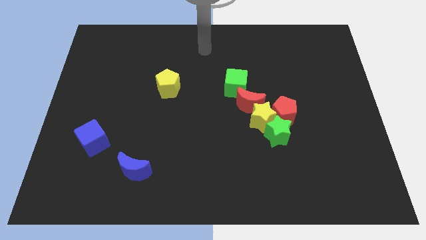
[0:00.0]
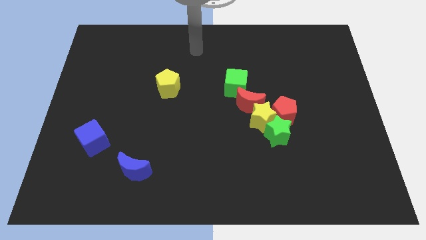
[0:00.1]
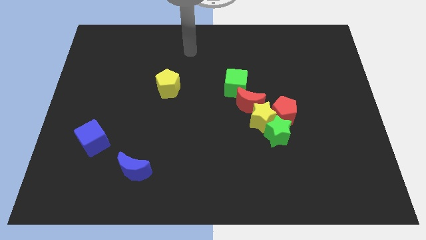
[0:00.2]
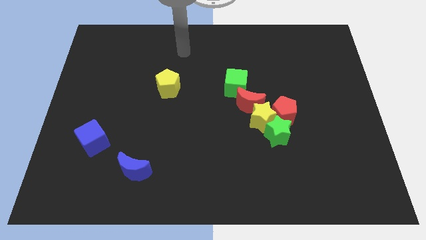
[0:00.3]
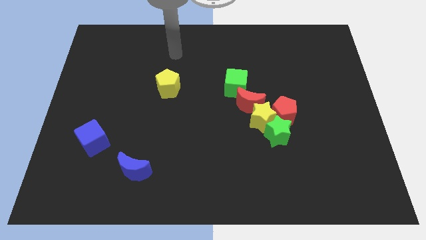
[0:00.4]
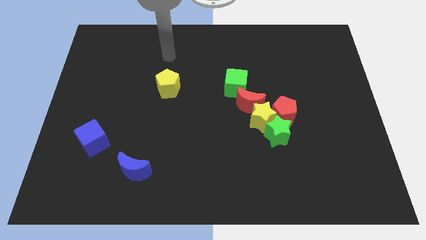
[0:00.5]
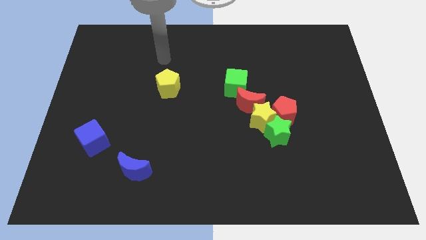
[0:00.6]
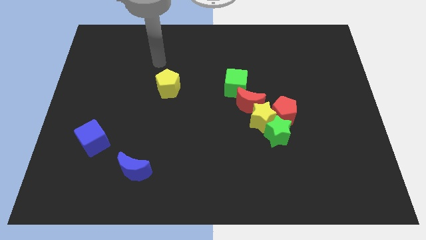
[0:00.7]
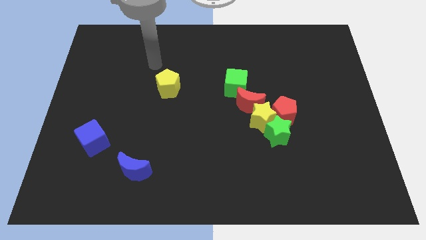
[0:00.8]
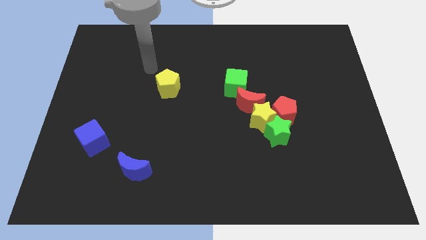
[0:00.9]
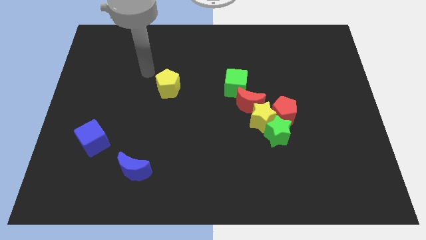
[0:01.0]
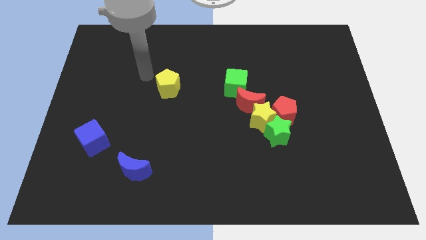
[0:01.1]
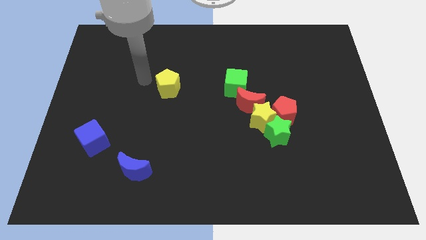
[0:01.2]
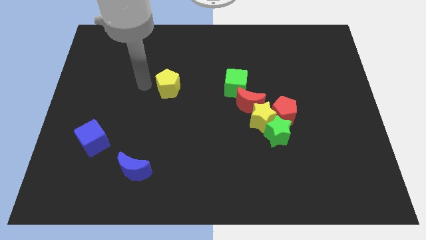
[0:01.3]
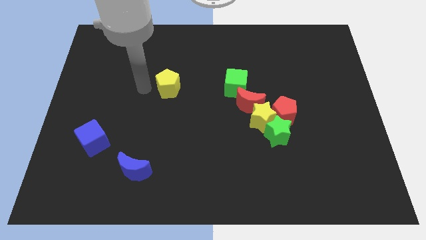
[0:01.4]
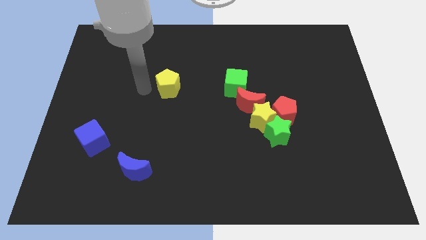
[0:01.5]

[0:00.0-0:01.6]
place your hand at the left side of the yellow pentagon

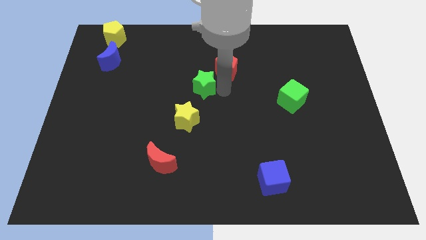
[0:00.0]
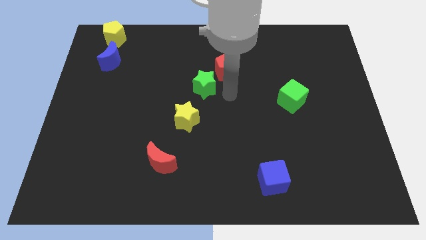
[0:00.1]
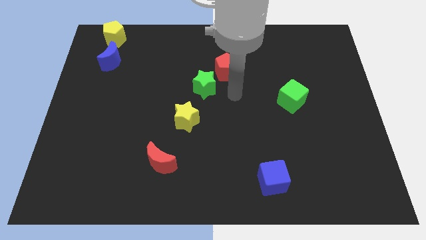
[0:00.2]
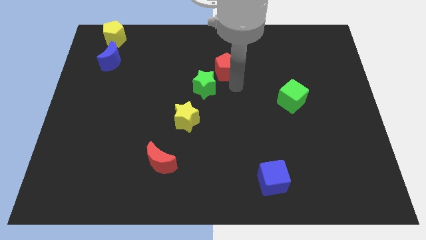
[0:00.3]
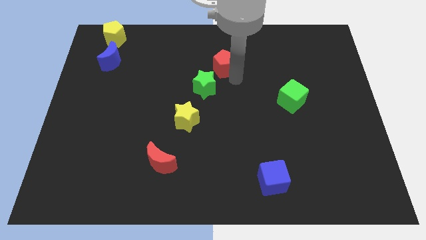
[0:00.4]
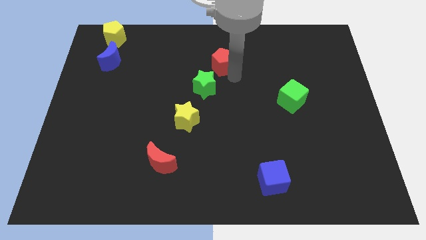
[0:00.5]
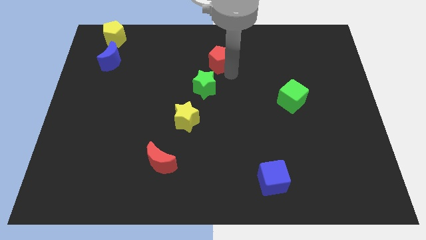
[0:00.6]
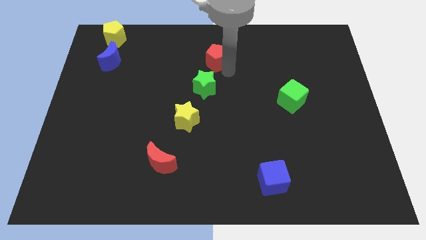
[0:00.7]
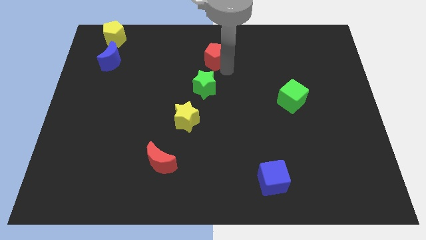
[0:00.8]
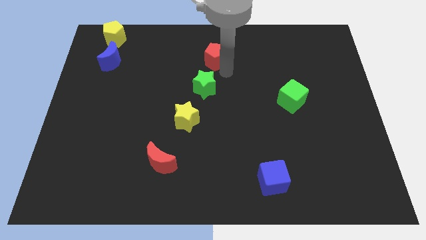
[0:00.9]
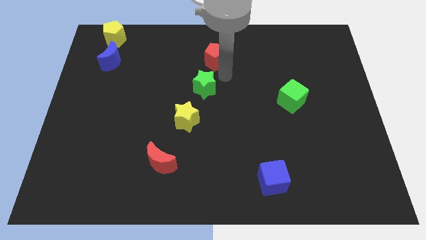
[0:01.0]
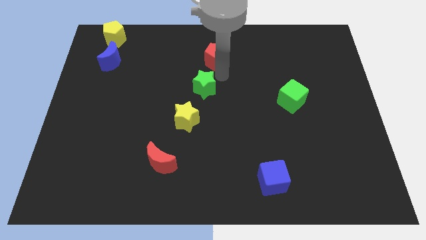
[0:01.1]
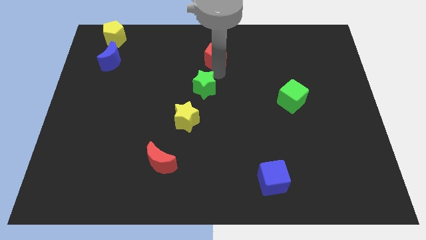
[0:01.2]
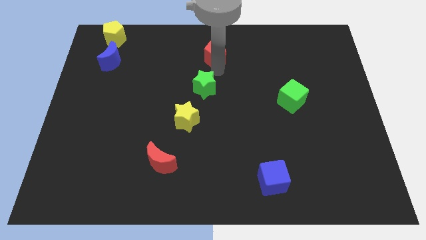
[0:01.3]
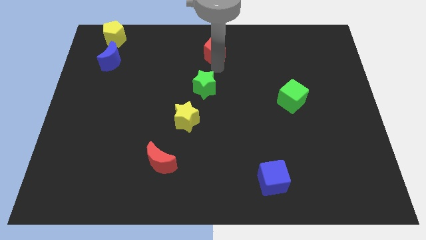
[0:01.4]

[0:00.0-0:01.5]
push the red pentagon towards the top center of the board

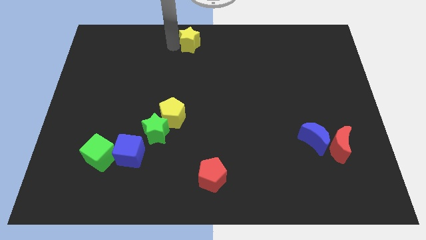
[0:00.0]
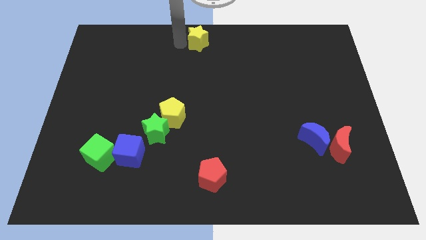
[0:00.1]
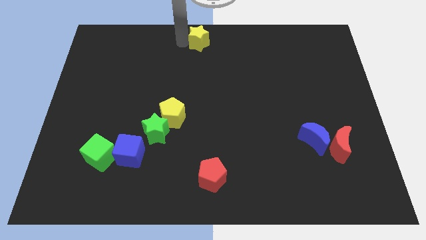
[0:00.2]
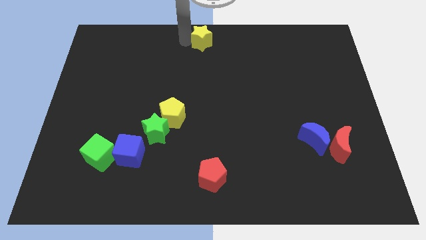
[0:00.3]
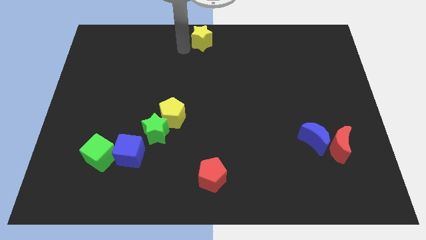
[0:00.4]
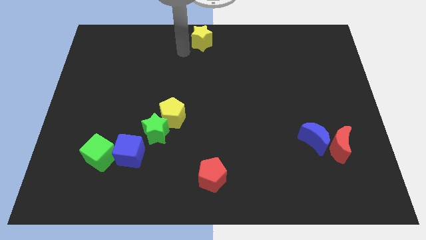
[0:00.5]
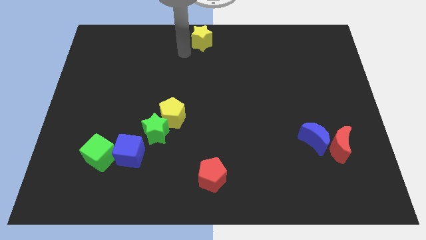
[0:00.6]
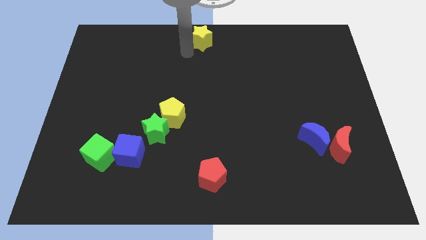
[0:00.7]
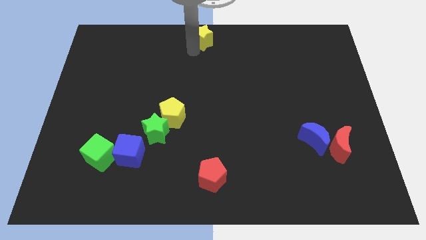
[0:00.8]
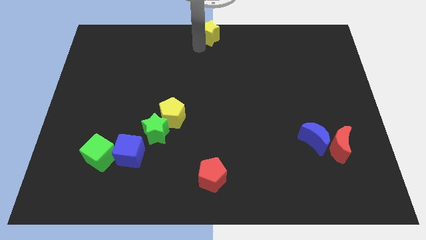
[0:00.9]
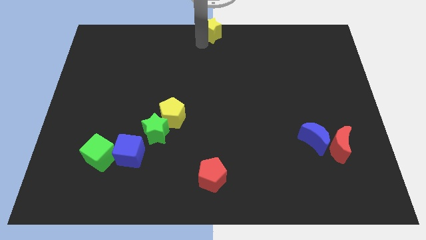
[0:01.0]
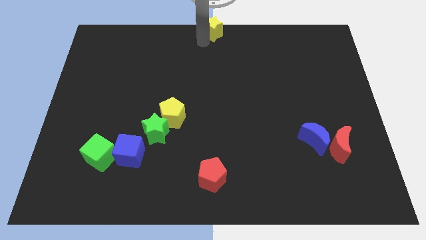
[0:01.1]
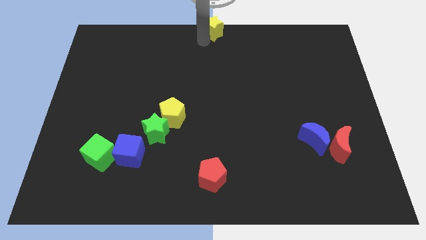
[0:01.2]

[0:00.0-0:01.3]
place the yellow star at the top center of the board

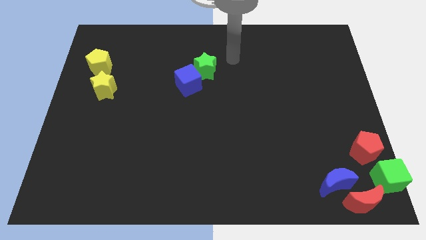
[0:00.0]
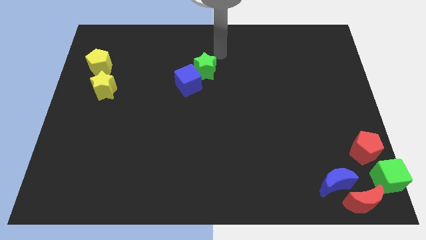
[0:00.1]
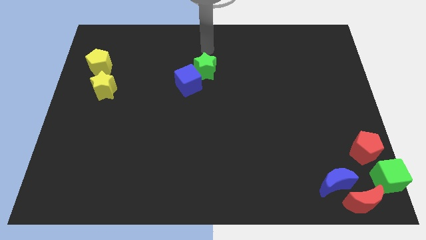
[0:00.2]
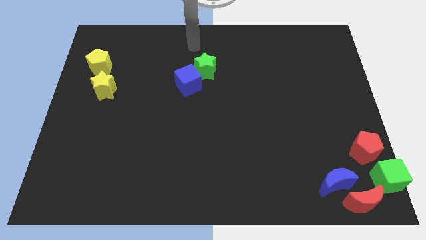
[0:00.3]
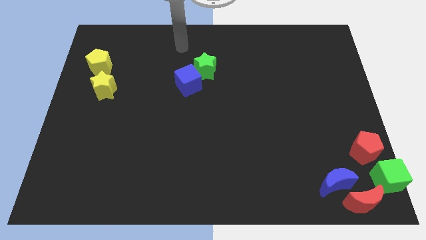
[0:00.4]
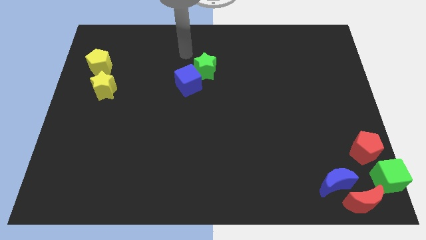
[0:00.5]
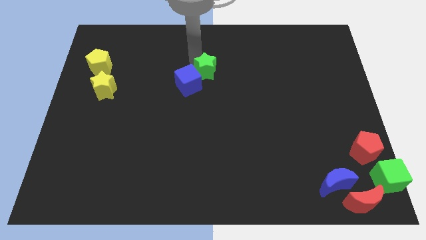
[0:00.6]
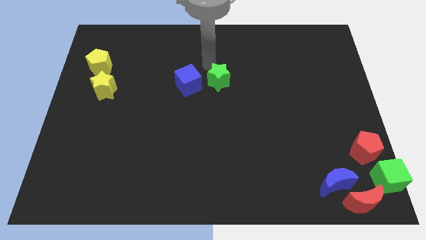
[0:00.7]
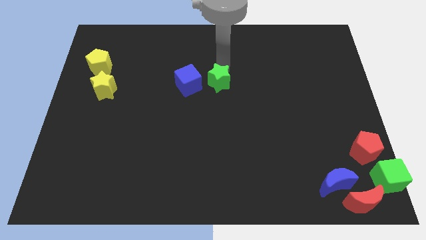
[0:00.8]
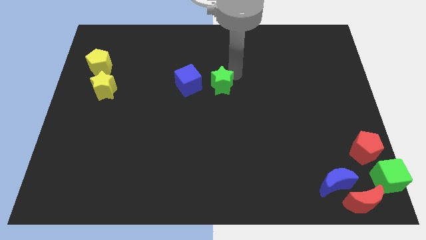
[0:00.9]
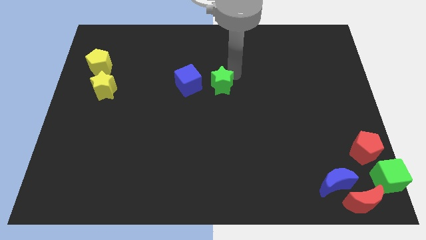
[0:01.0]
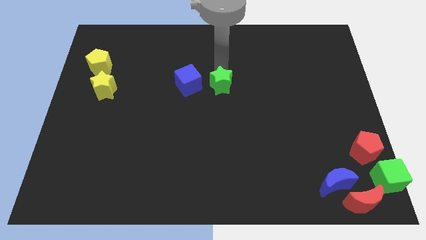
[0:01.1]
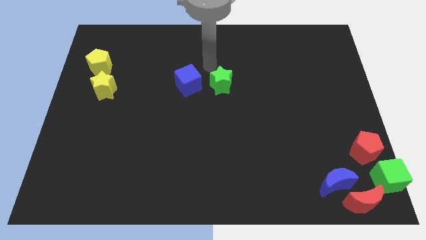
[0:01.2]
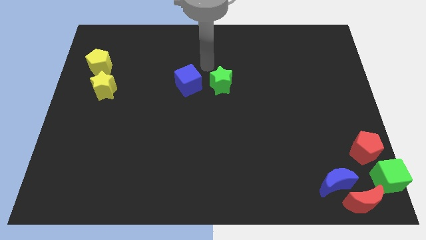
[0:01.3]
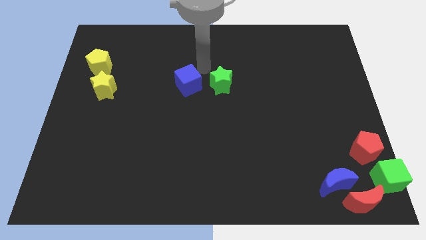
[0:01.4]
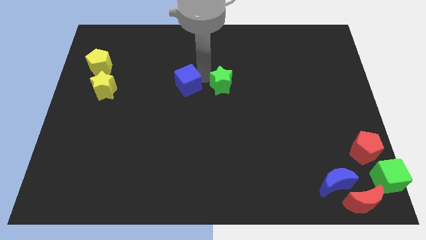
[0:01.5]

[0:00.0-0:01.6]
push the green star right to the blue cube

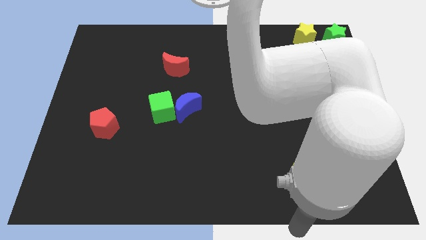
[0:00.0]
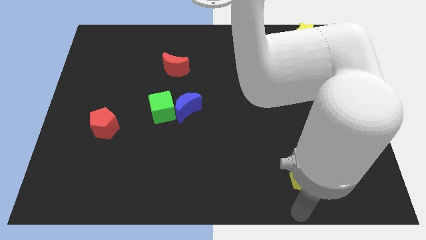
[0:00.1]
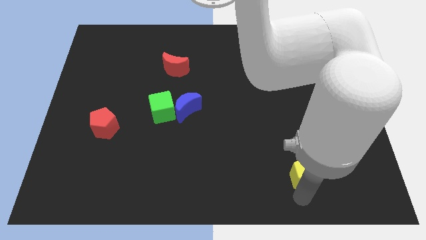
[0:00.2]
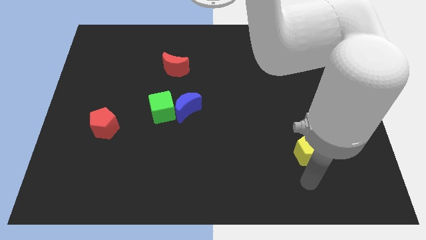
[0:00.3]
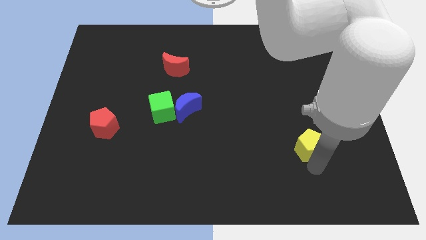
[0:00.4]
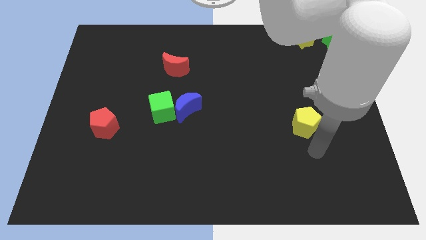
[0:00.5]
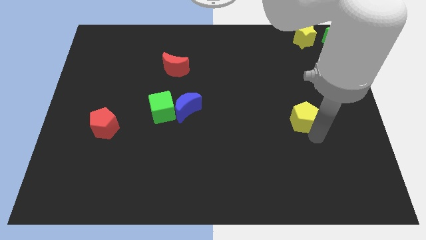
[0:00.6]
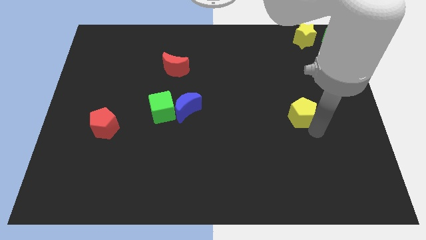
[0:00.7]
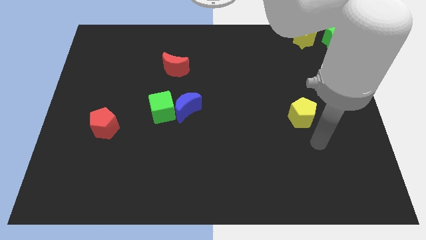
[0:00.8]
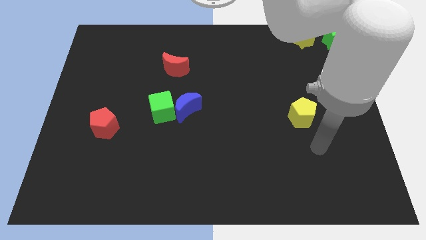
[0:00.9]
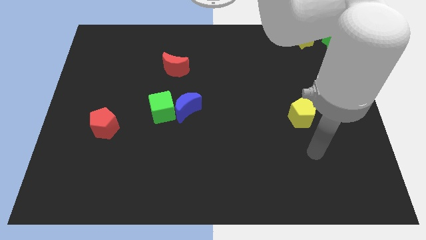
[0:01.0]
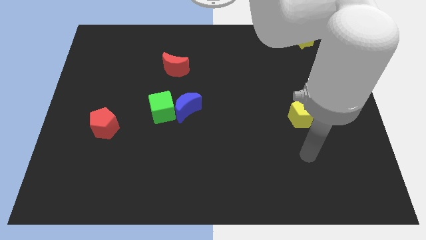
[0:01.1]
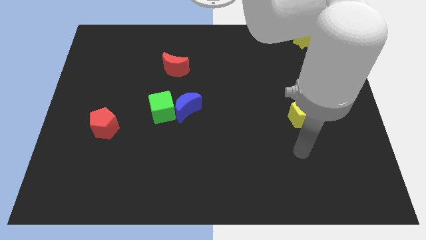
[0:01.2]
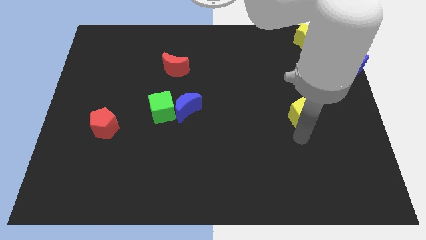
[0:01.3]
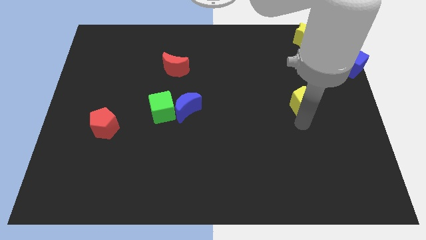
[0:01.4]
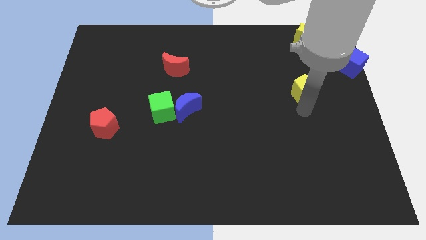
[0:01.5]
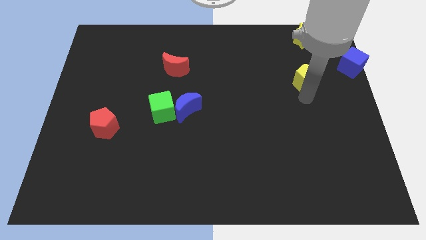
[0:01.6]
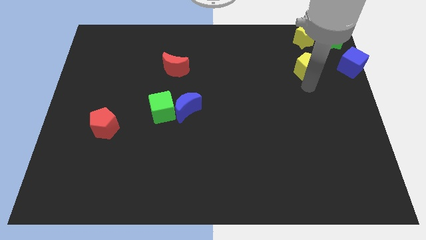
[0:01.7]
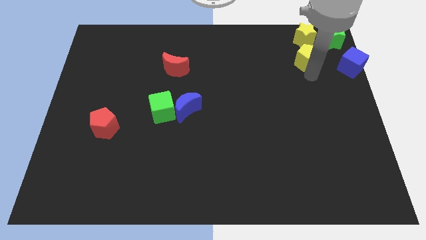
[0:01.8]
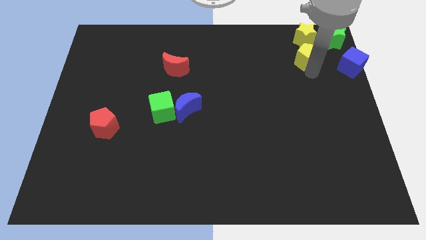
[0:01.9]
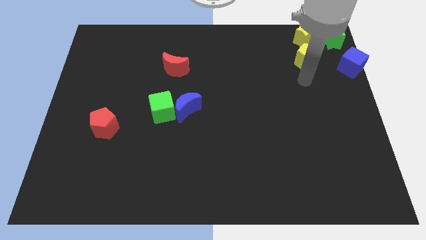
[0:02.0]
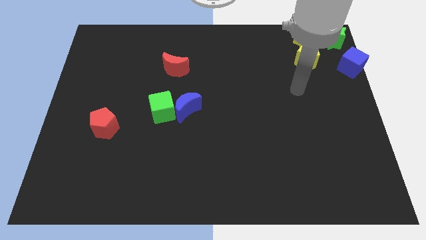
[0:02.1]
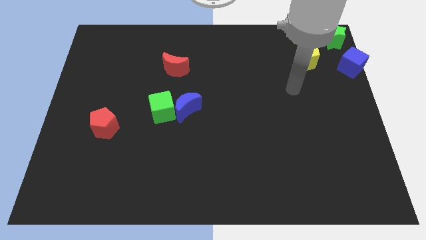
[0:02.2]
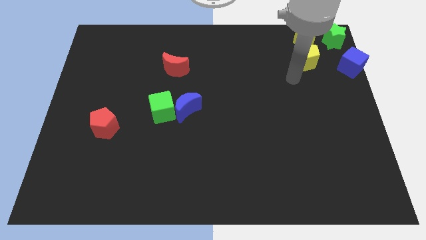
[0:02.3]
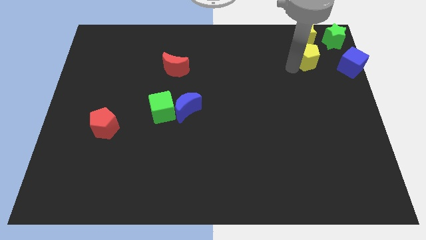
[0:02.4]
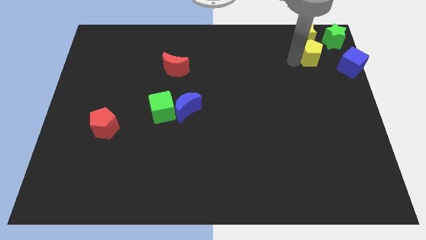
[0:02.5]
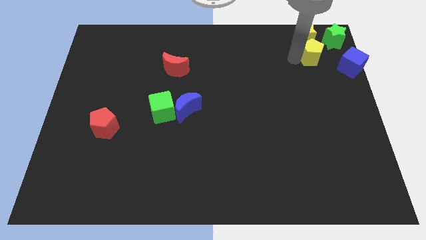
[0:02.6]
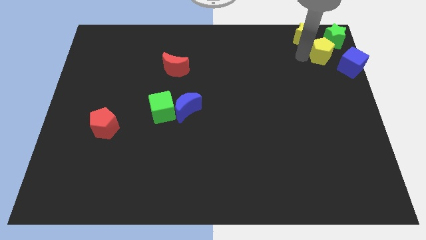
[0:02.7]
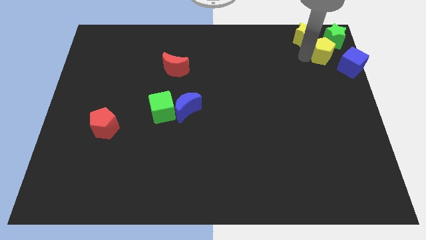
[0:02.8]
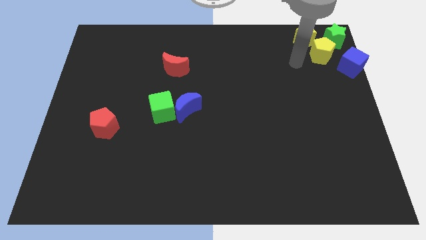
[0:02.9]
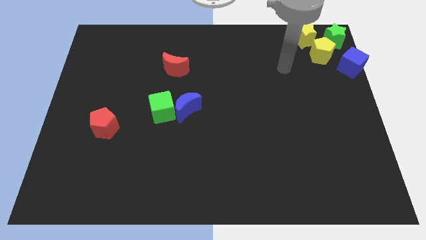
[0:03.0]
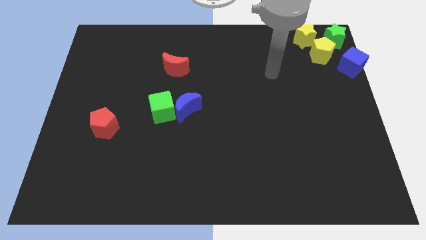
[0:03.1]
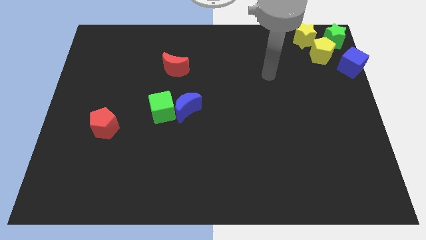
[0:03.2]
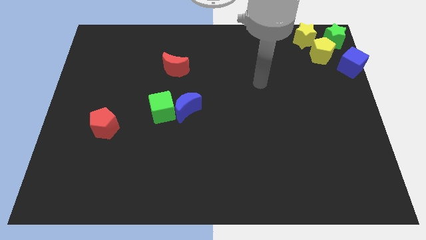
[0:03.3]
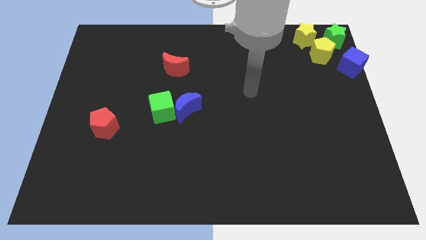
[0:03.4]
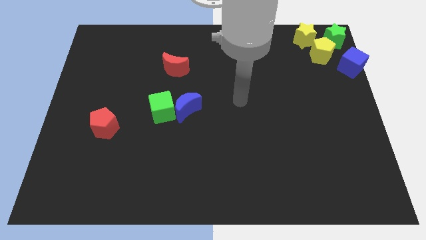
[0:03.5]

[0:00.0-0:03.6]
place the yellow pentagon to the right bottom of the yellow star
